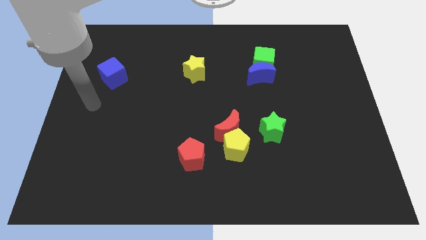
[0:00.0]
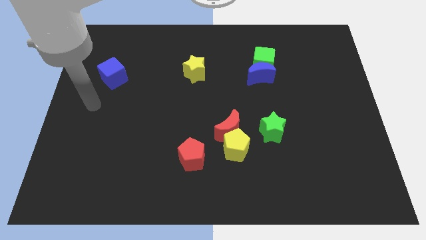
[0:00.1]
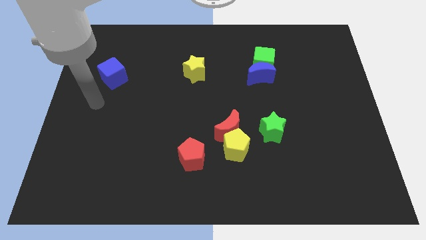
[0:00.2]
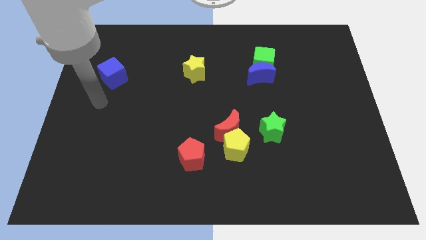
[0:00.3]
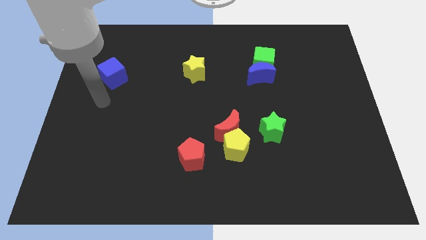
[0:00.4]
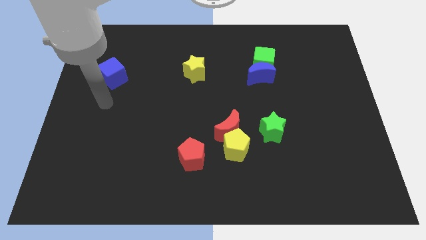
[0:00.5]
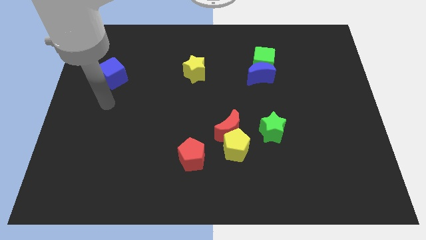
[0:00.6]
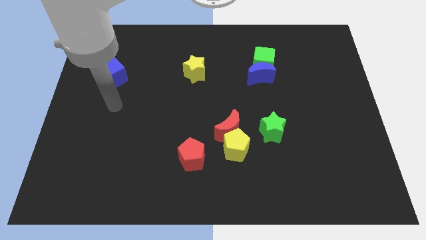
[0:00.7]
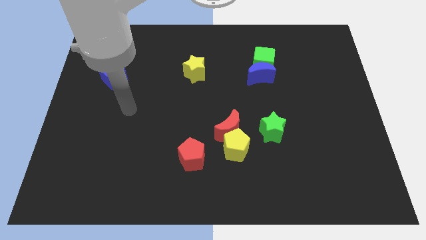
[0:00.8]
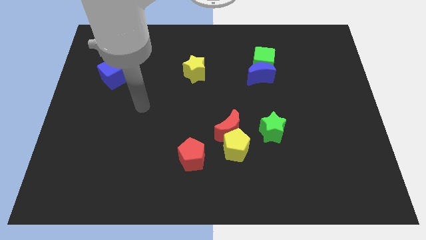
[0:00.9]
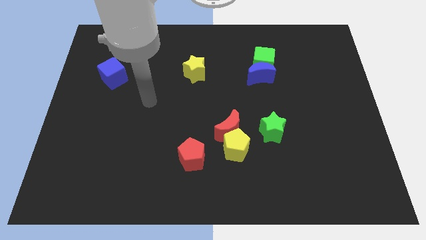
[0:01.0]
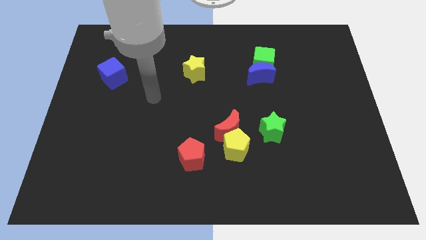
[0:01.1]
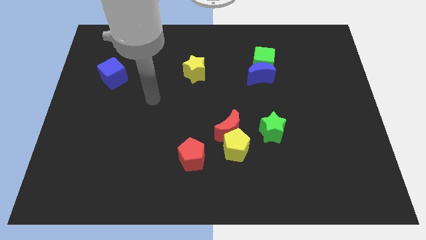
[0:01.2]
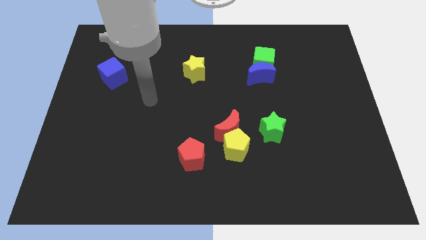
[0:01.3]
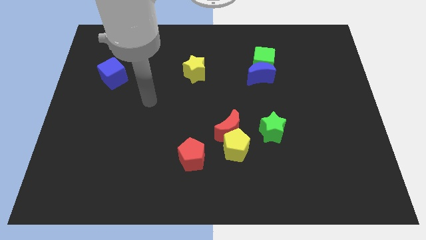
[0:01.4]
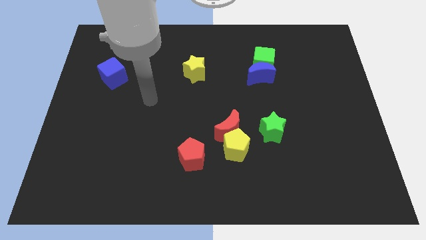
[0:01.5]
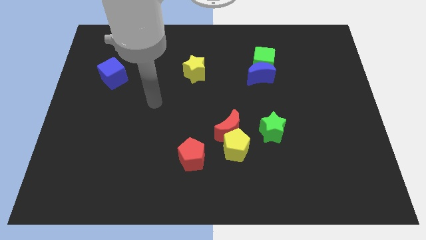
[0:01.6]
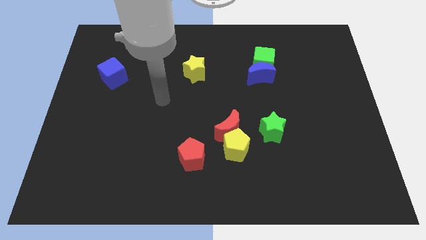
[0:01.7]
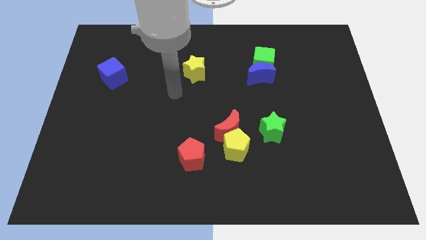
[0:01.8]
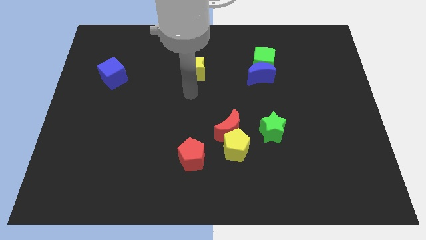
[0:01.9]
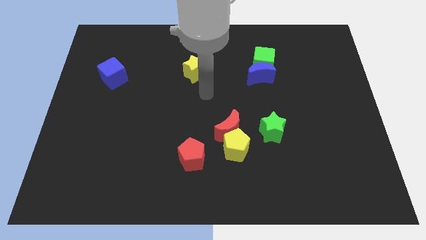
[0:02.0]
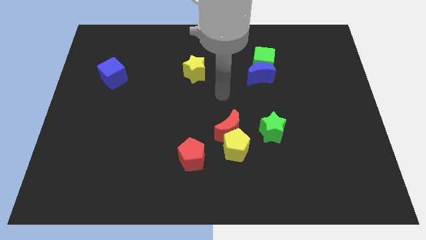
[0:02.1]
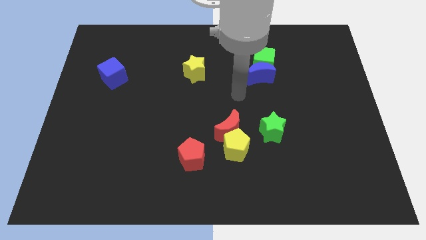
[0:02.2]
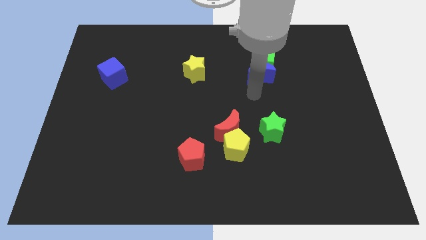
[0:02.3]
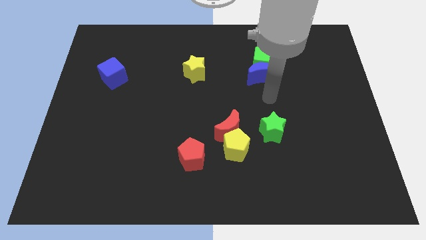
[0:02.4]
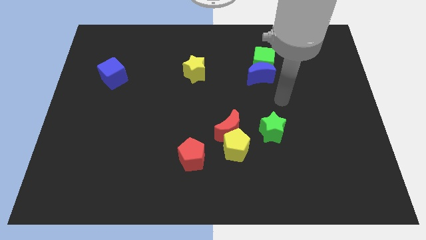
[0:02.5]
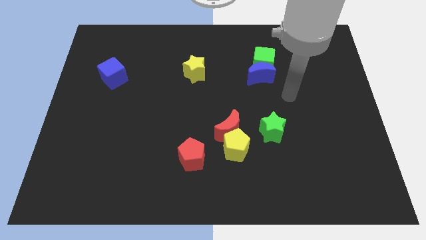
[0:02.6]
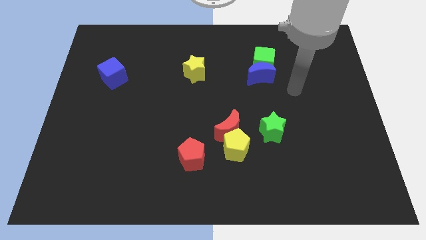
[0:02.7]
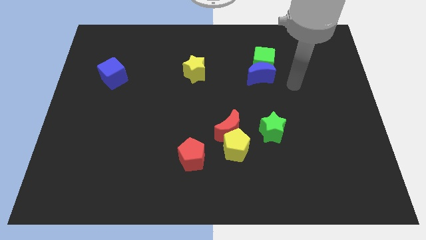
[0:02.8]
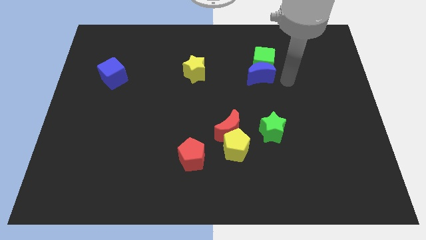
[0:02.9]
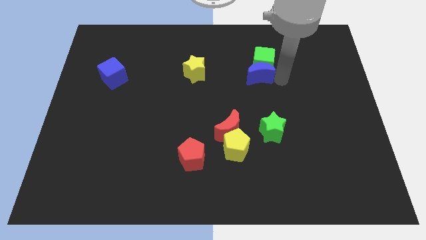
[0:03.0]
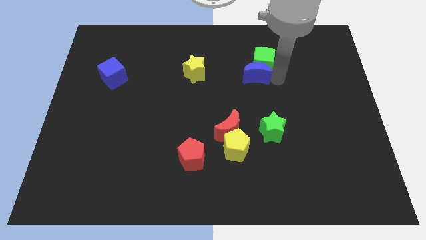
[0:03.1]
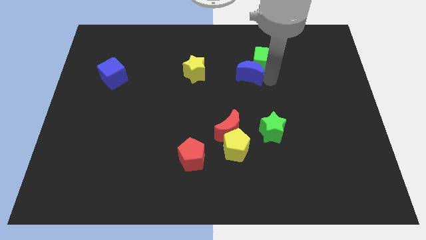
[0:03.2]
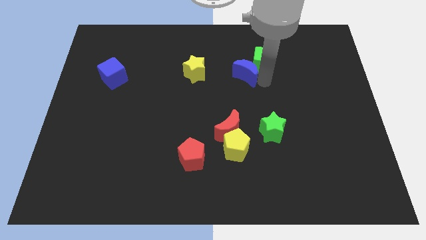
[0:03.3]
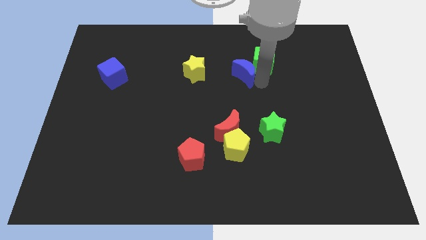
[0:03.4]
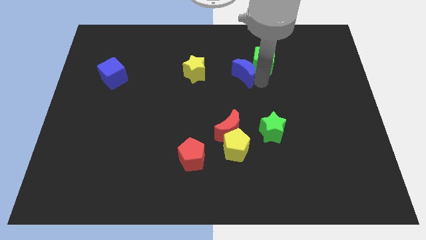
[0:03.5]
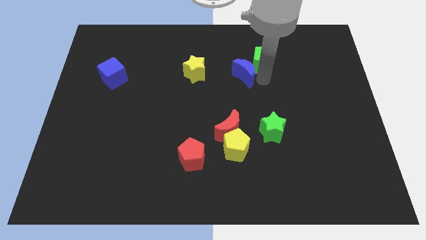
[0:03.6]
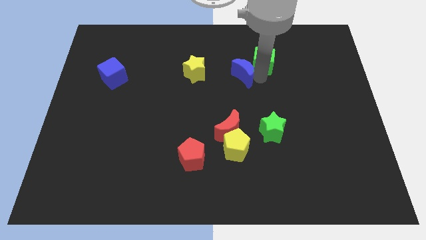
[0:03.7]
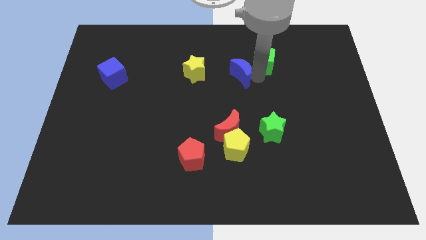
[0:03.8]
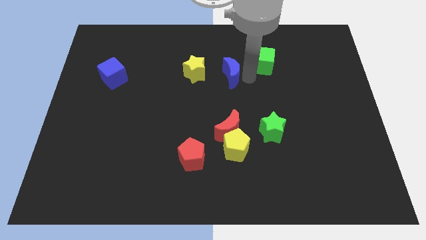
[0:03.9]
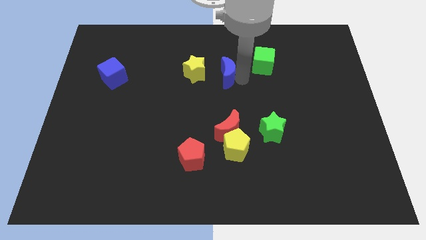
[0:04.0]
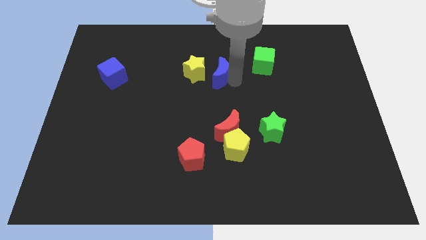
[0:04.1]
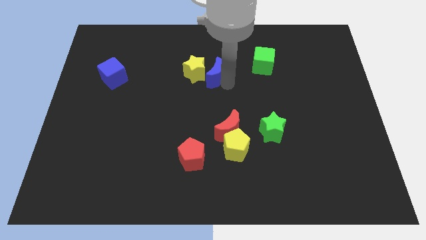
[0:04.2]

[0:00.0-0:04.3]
move the blue crescent slightly towards the yellow star

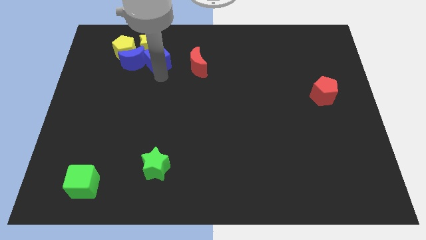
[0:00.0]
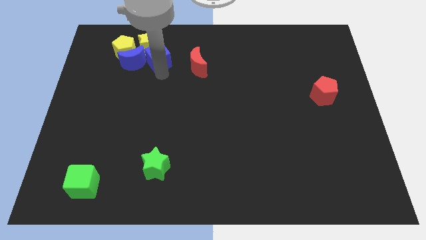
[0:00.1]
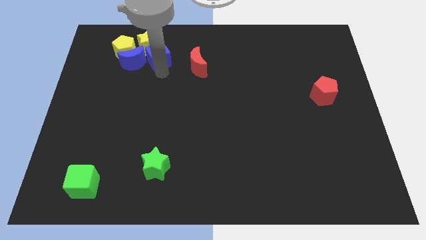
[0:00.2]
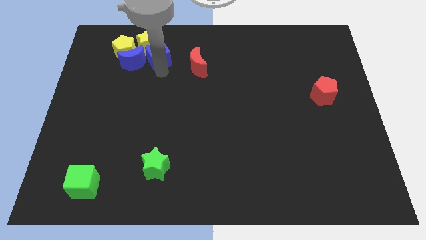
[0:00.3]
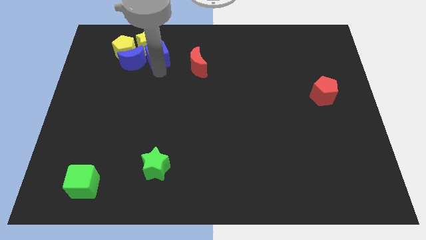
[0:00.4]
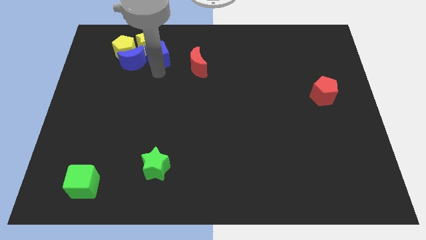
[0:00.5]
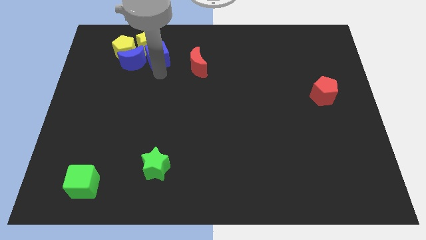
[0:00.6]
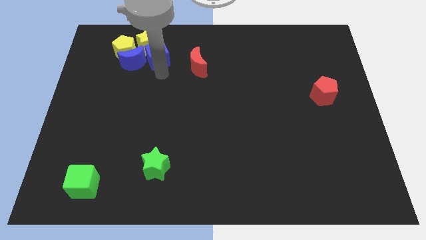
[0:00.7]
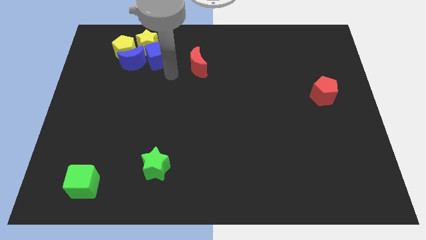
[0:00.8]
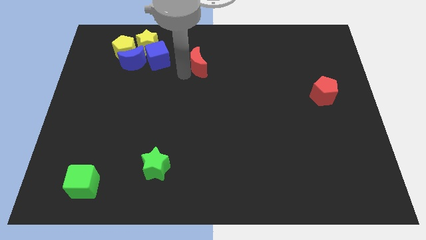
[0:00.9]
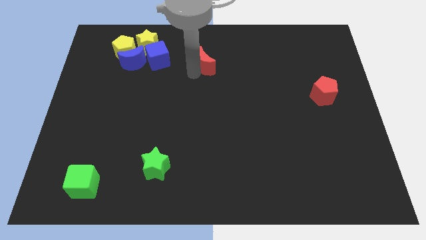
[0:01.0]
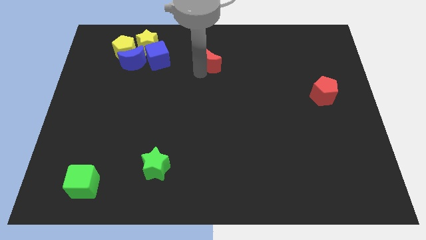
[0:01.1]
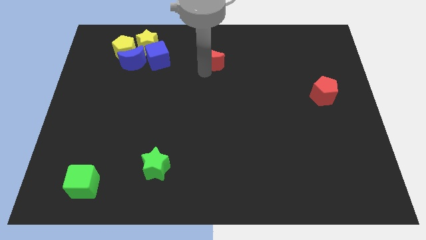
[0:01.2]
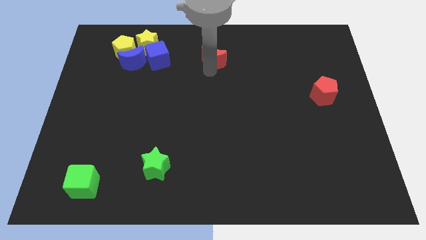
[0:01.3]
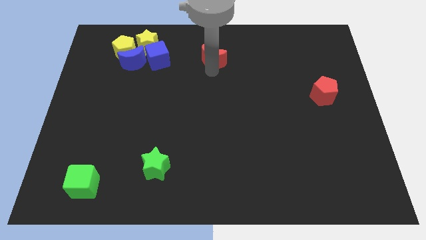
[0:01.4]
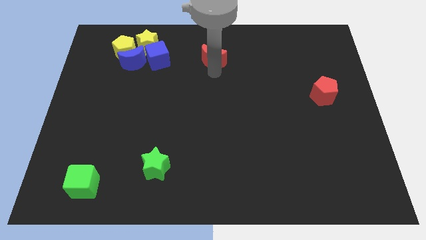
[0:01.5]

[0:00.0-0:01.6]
move red moon slightly right

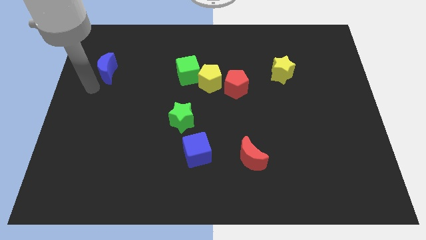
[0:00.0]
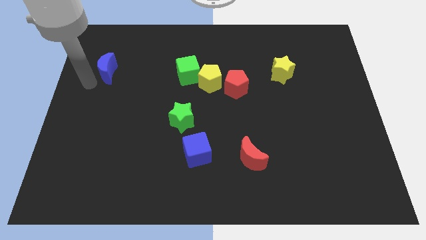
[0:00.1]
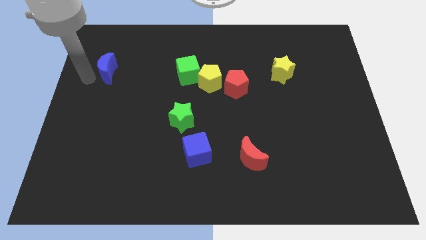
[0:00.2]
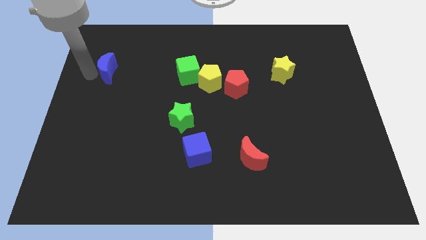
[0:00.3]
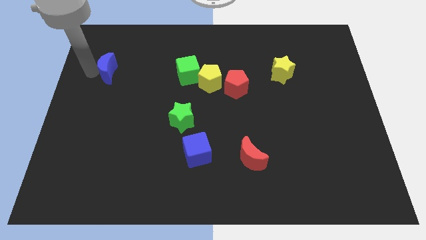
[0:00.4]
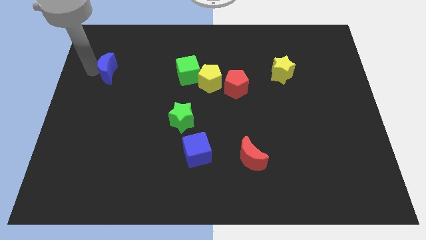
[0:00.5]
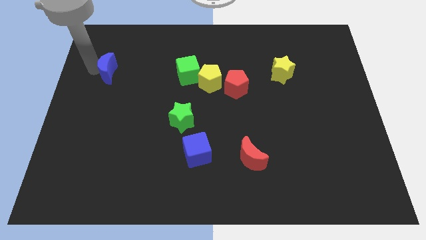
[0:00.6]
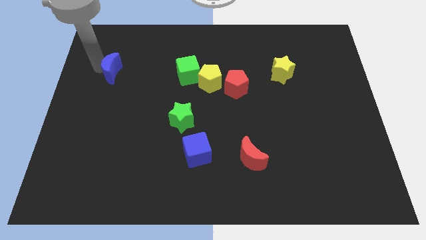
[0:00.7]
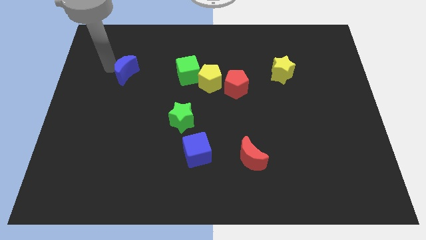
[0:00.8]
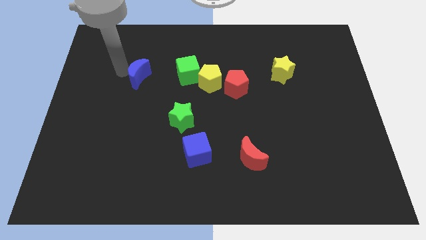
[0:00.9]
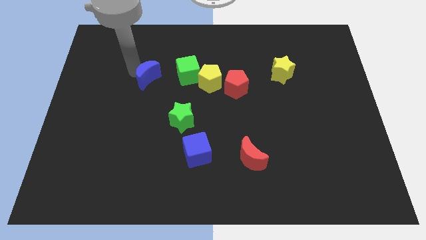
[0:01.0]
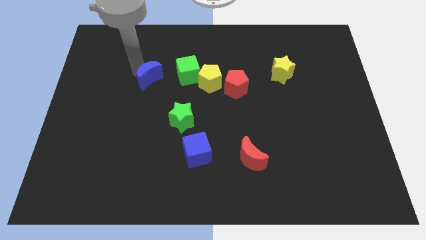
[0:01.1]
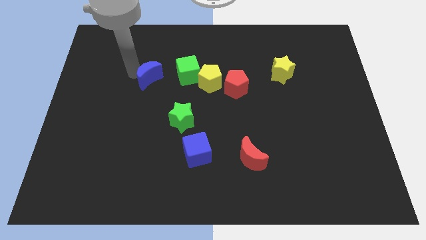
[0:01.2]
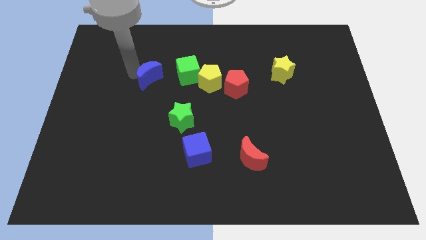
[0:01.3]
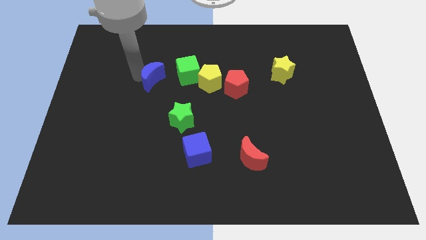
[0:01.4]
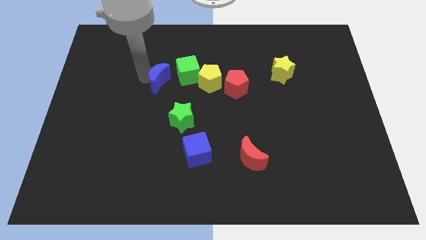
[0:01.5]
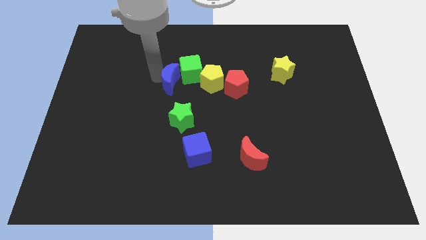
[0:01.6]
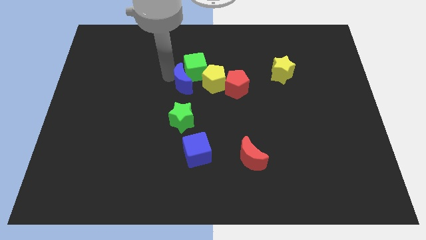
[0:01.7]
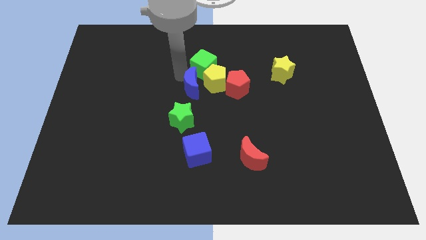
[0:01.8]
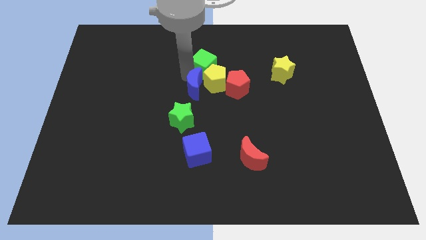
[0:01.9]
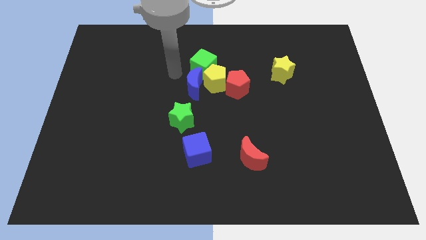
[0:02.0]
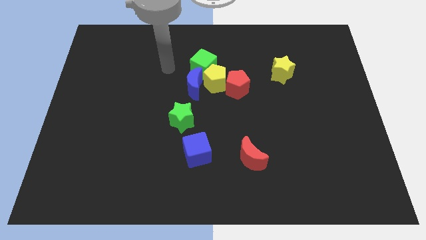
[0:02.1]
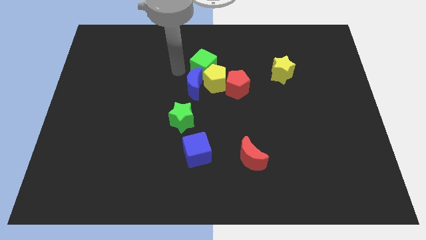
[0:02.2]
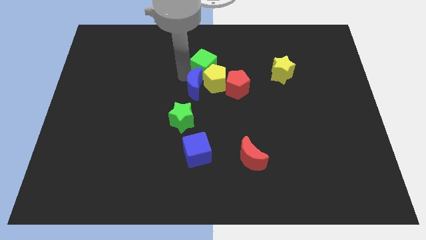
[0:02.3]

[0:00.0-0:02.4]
push the blue moon into the group of blocks

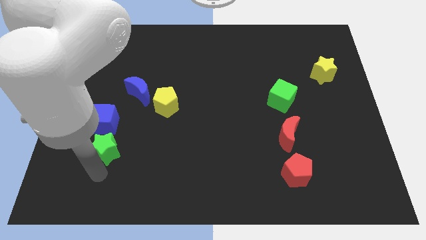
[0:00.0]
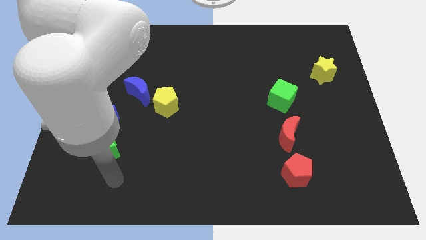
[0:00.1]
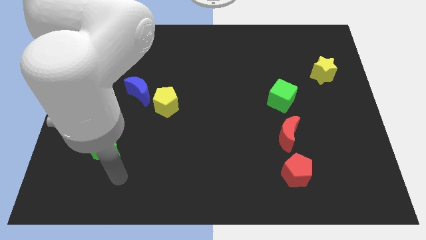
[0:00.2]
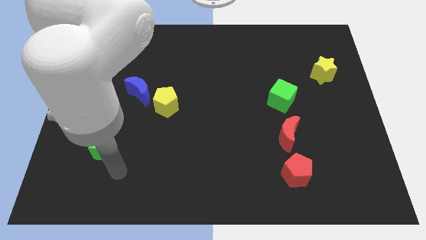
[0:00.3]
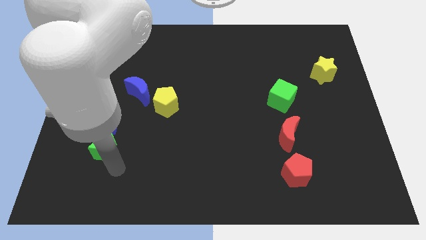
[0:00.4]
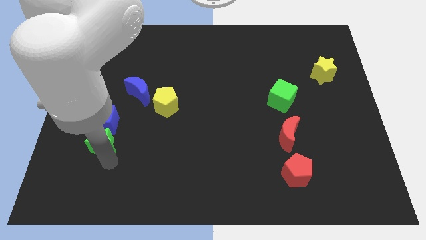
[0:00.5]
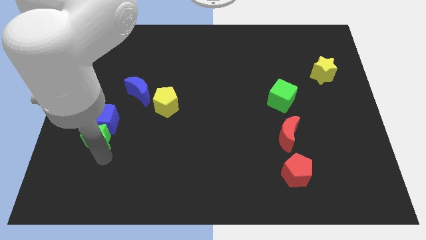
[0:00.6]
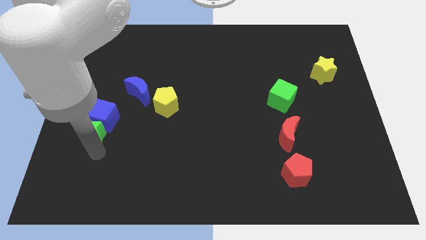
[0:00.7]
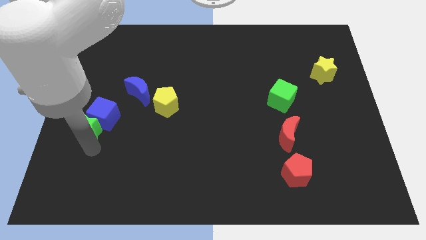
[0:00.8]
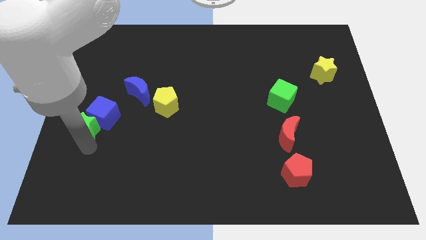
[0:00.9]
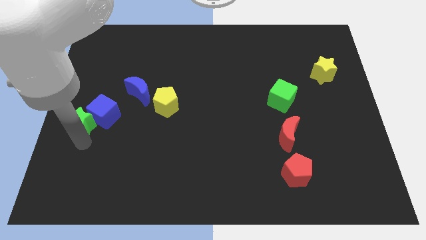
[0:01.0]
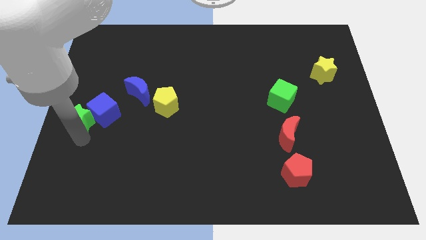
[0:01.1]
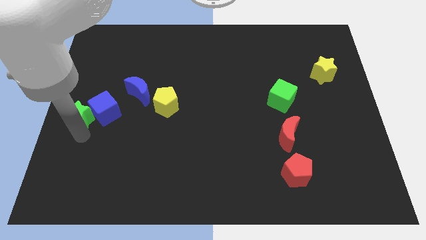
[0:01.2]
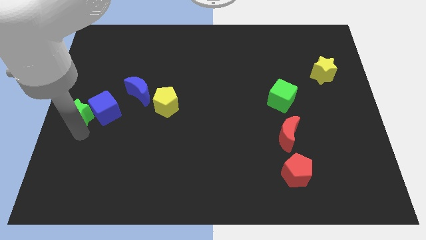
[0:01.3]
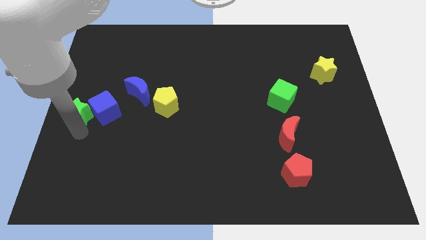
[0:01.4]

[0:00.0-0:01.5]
place the green star to the left side of the blue cube
